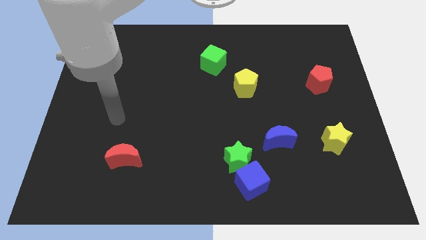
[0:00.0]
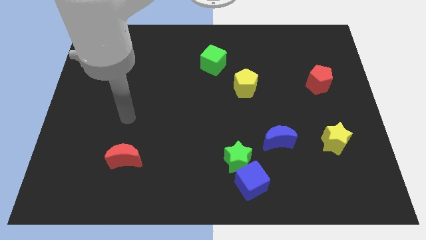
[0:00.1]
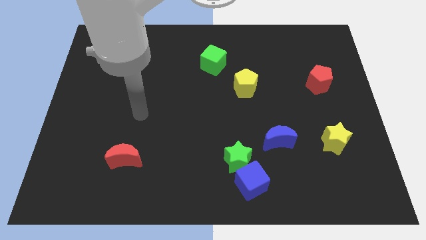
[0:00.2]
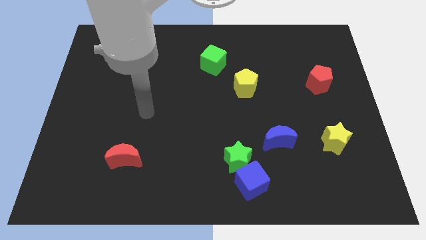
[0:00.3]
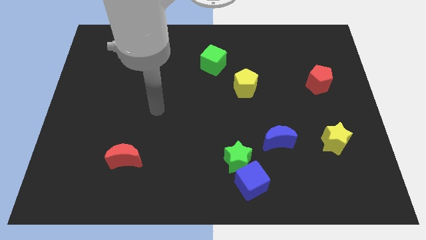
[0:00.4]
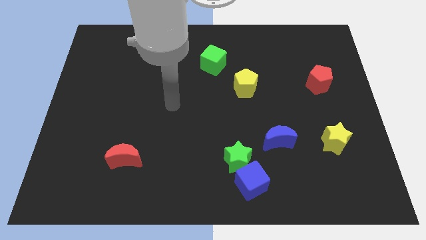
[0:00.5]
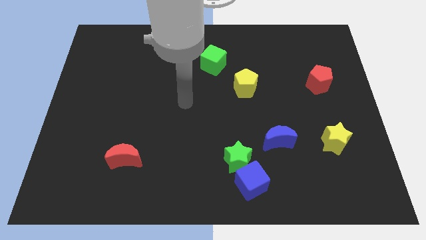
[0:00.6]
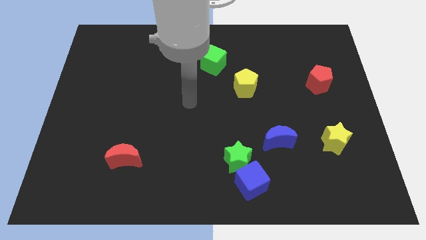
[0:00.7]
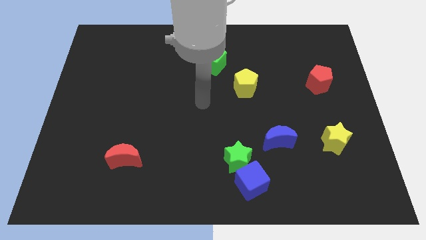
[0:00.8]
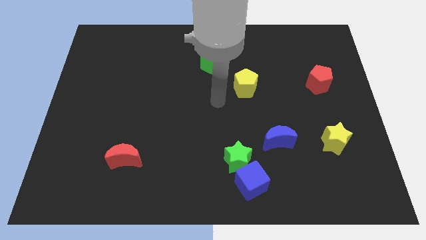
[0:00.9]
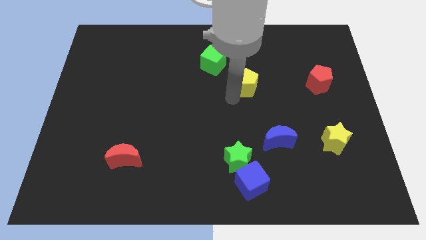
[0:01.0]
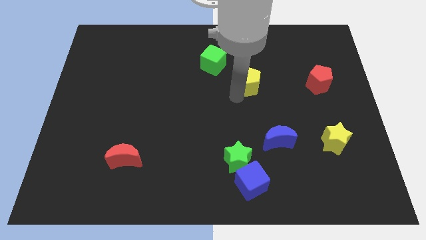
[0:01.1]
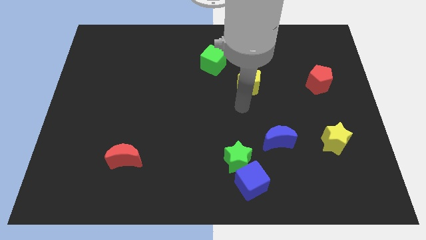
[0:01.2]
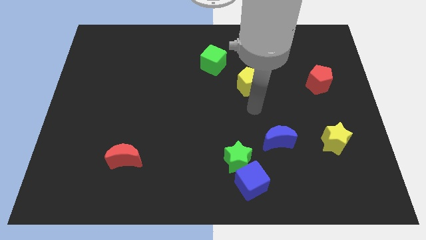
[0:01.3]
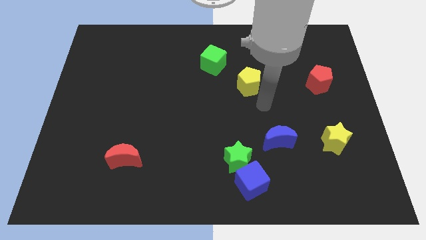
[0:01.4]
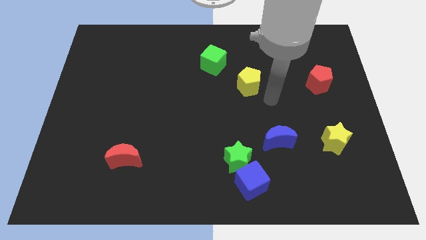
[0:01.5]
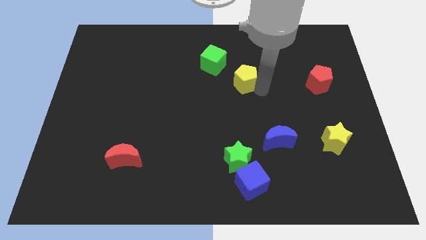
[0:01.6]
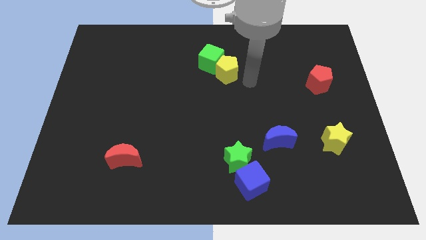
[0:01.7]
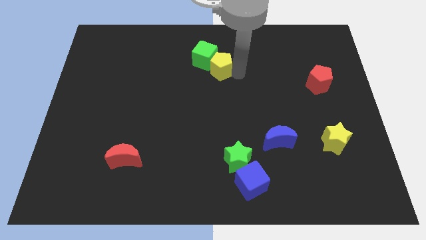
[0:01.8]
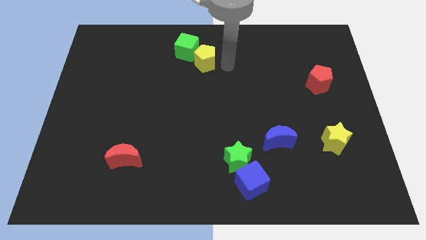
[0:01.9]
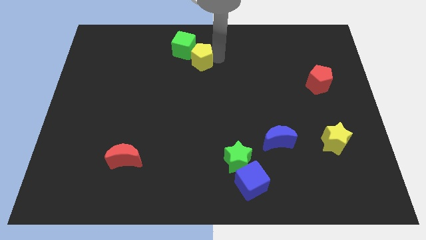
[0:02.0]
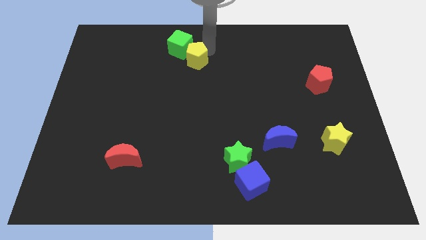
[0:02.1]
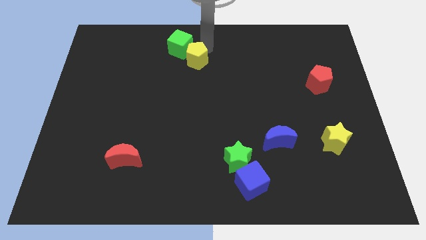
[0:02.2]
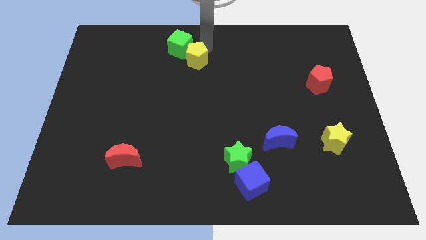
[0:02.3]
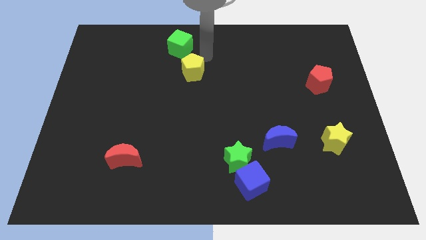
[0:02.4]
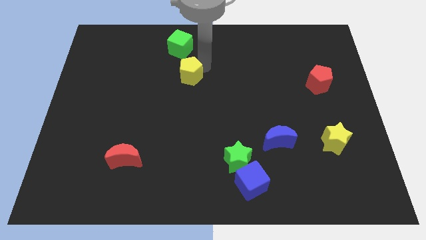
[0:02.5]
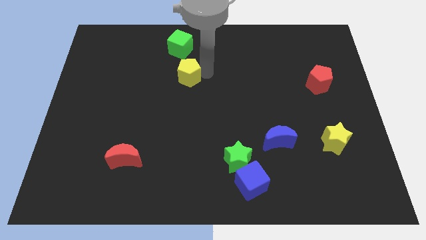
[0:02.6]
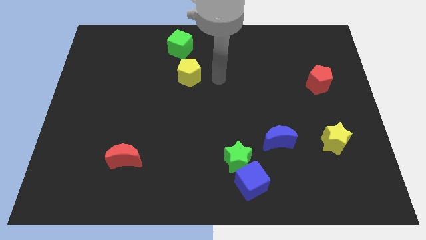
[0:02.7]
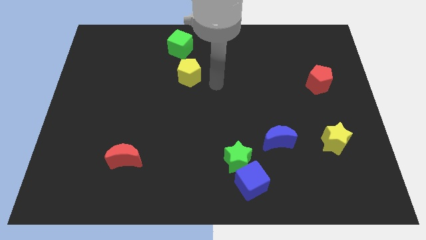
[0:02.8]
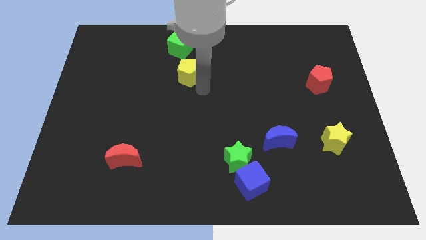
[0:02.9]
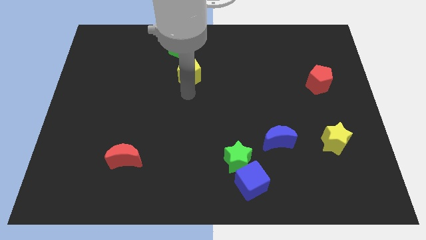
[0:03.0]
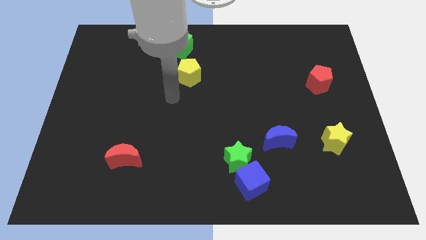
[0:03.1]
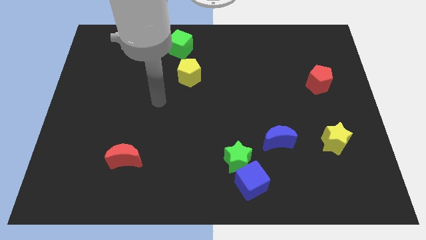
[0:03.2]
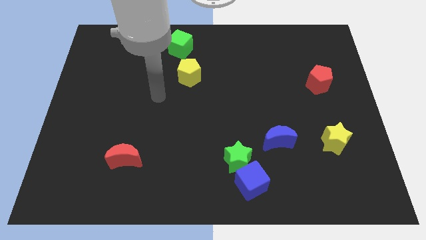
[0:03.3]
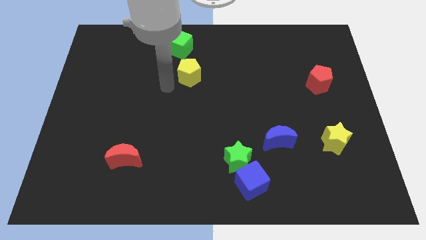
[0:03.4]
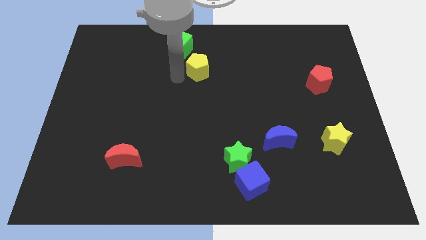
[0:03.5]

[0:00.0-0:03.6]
place the yellow pentagon diagonally in between both the green blocks

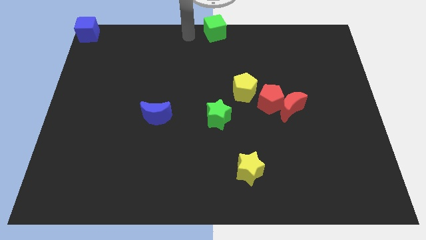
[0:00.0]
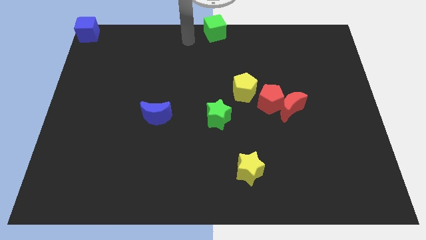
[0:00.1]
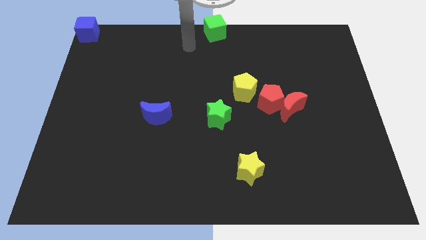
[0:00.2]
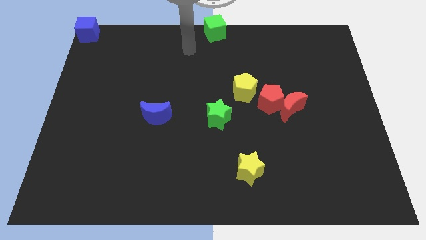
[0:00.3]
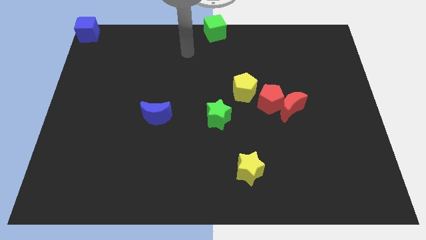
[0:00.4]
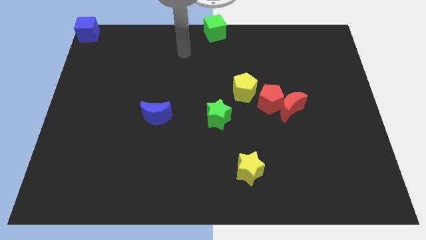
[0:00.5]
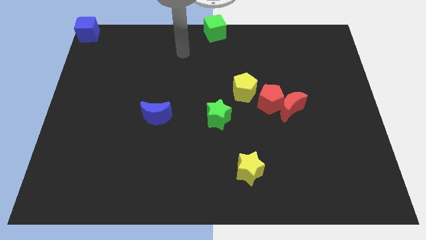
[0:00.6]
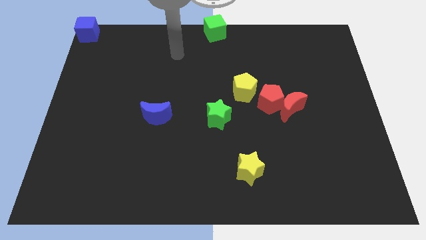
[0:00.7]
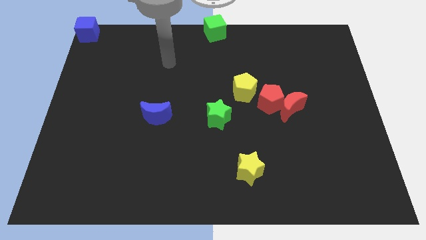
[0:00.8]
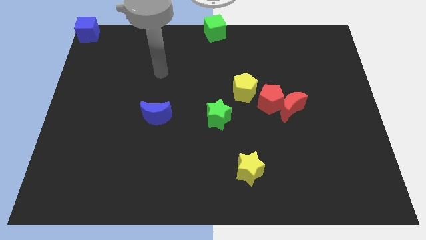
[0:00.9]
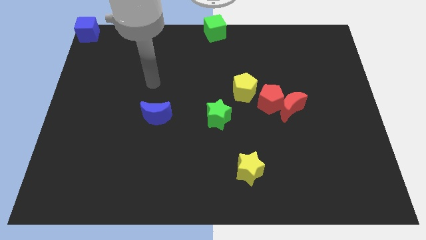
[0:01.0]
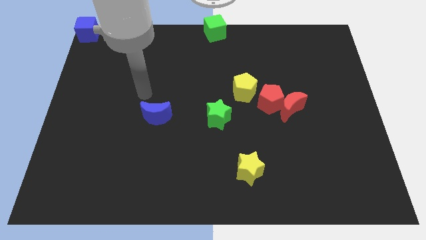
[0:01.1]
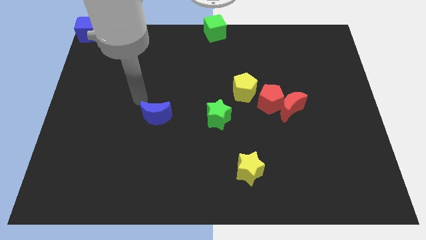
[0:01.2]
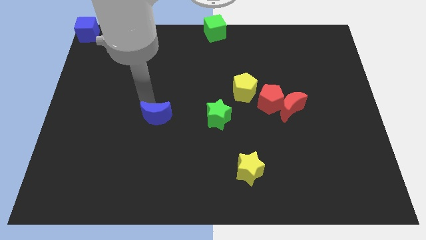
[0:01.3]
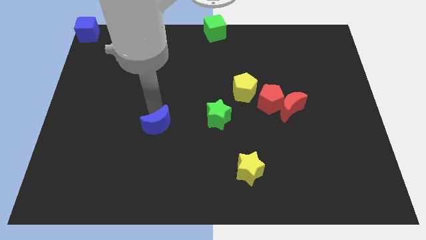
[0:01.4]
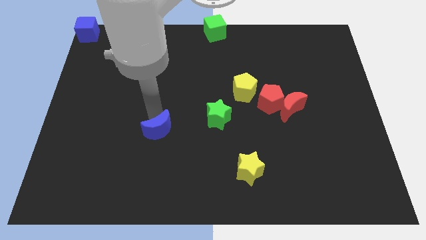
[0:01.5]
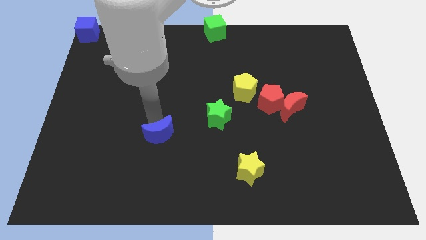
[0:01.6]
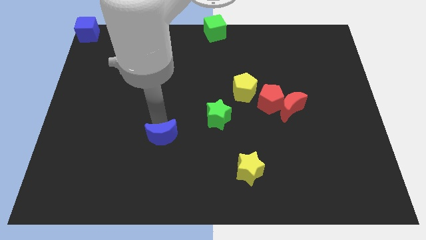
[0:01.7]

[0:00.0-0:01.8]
move the blue moon down slightly

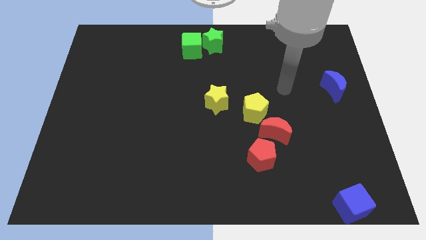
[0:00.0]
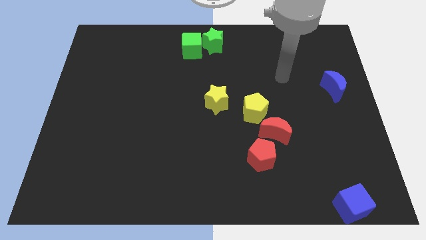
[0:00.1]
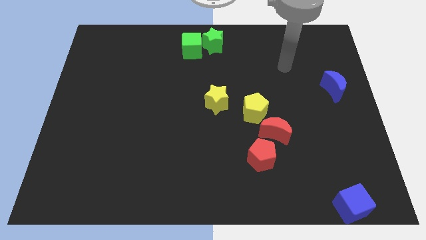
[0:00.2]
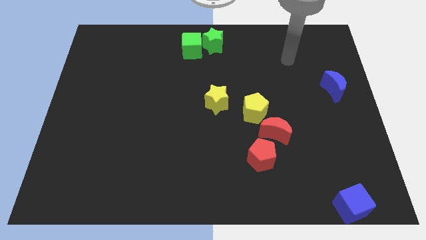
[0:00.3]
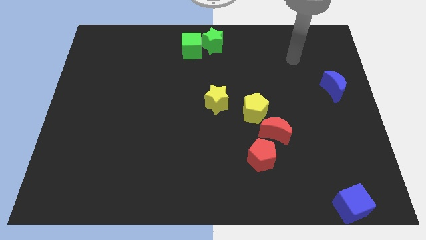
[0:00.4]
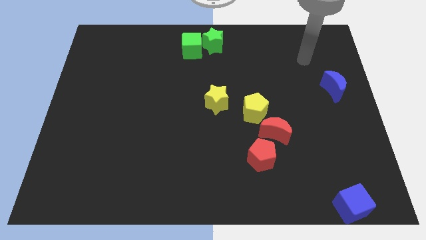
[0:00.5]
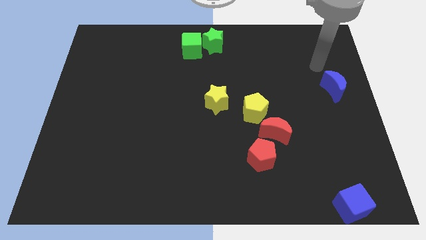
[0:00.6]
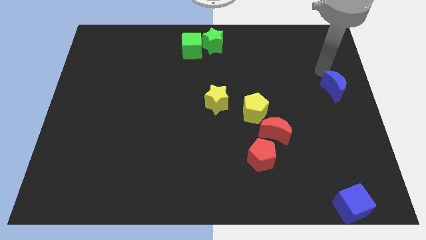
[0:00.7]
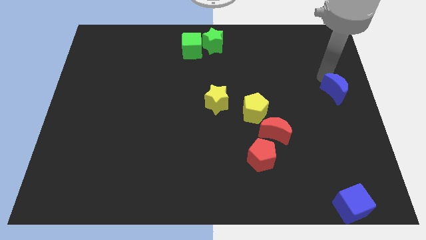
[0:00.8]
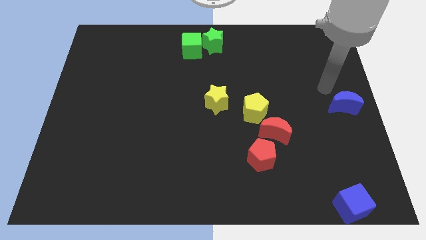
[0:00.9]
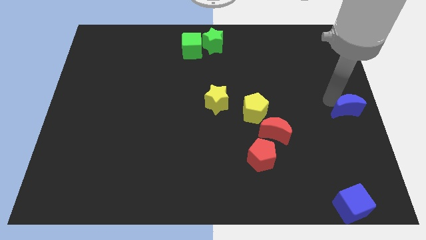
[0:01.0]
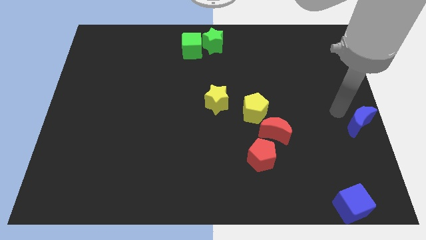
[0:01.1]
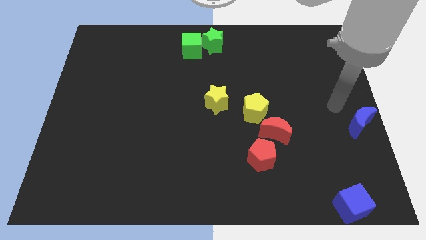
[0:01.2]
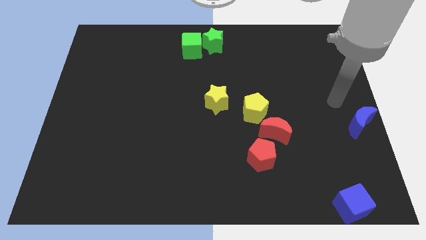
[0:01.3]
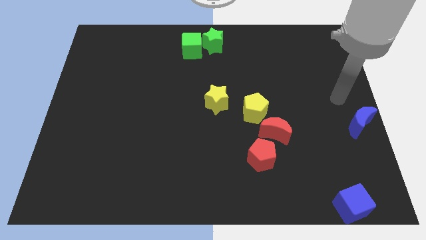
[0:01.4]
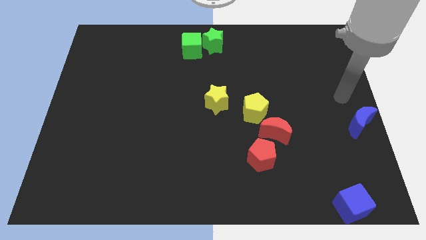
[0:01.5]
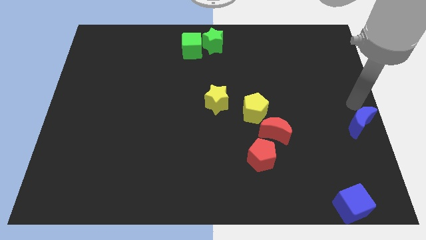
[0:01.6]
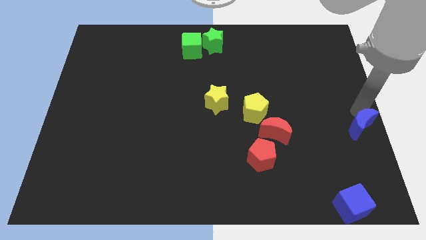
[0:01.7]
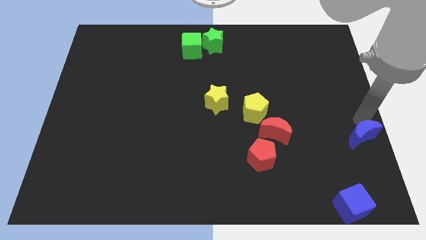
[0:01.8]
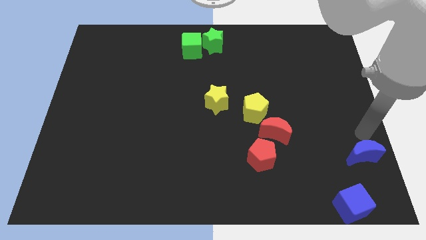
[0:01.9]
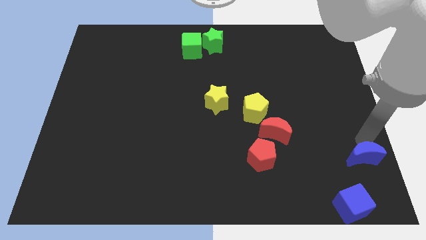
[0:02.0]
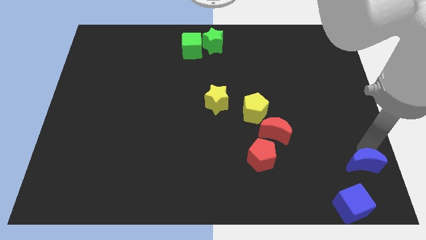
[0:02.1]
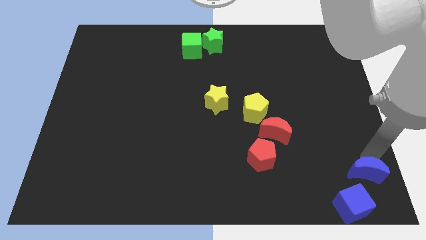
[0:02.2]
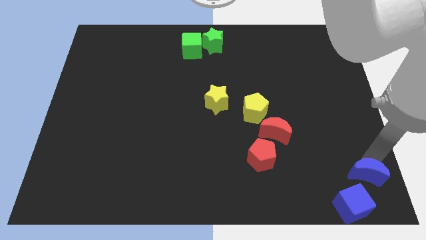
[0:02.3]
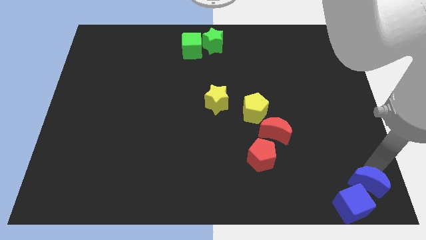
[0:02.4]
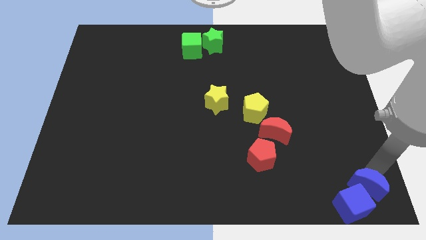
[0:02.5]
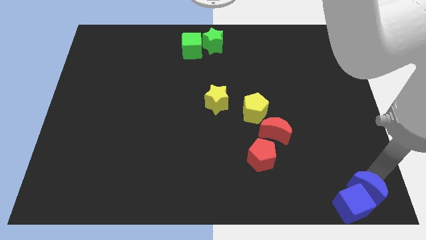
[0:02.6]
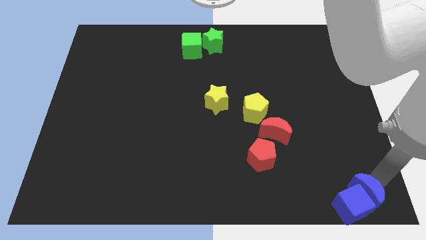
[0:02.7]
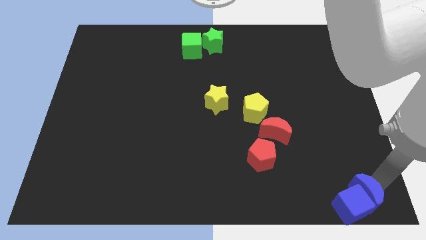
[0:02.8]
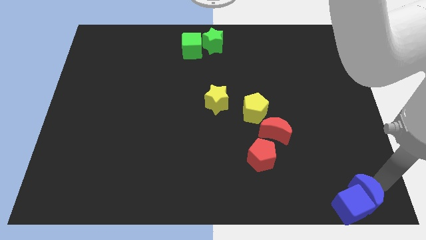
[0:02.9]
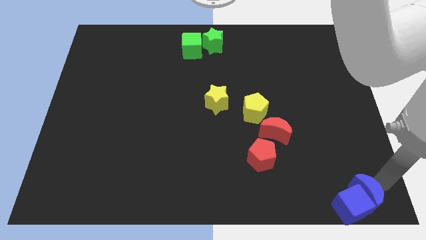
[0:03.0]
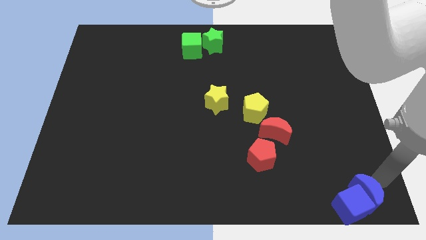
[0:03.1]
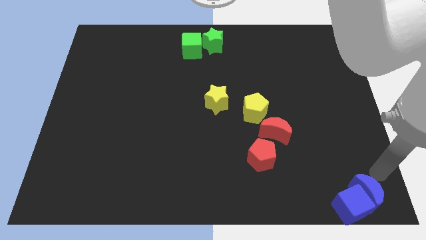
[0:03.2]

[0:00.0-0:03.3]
push the blue moon into the blue cube

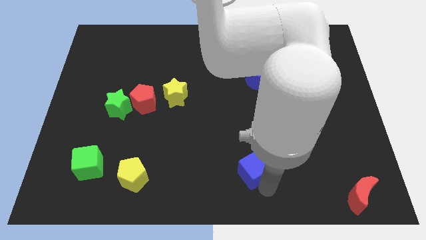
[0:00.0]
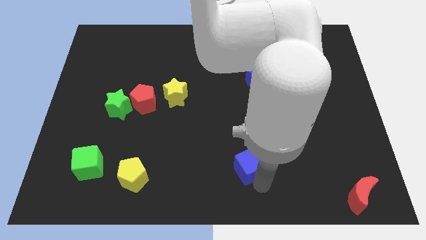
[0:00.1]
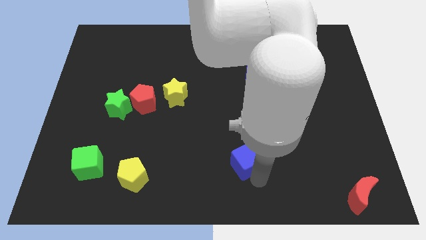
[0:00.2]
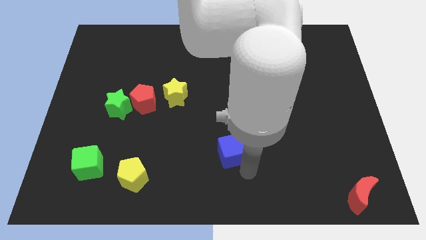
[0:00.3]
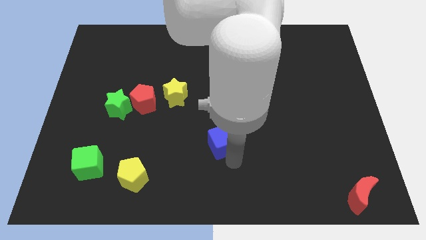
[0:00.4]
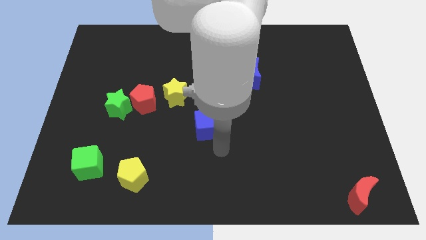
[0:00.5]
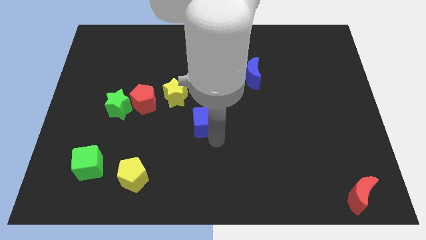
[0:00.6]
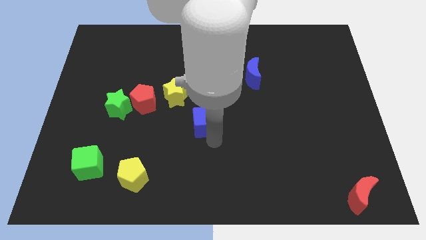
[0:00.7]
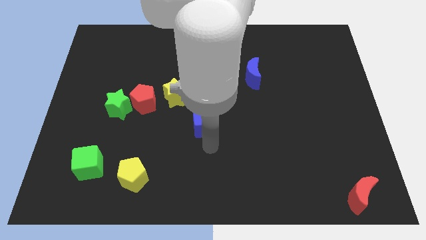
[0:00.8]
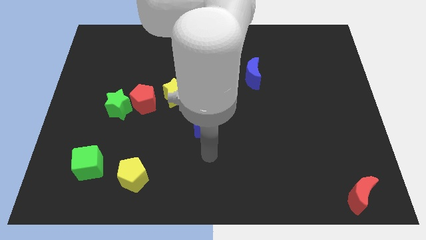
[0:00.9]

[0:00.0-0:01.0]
move the blue cube to the center of the board
